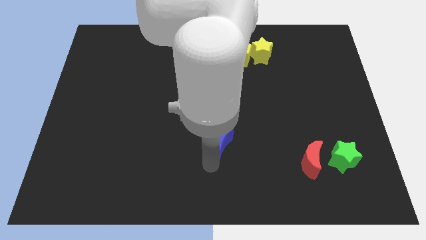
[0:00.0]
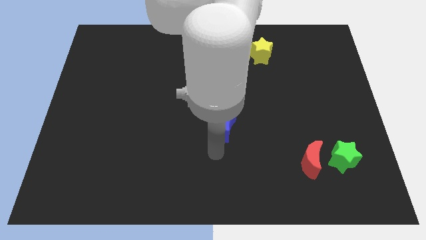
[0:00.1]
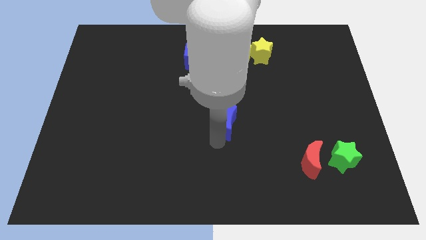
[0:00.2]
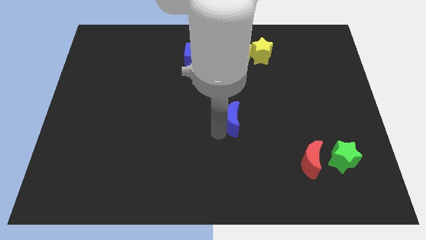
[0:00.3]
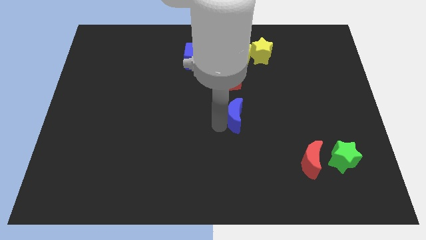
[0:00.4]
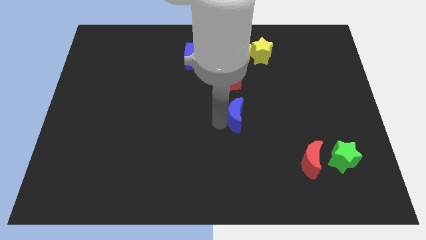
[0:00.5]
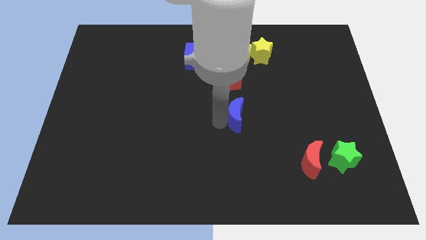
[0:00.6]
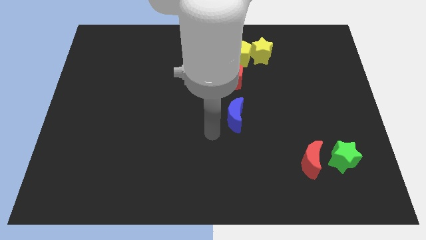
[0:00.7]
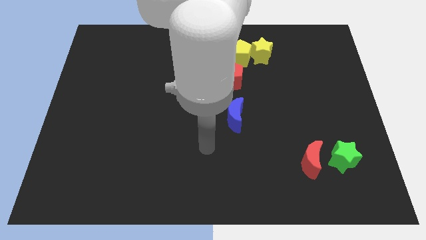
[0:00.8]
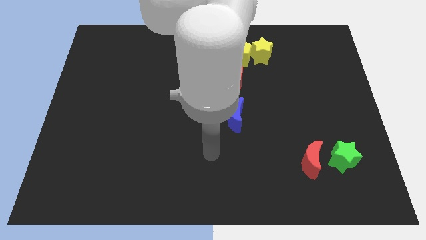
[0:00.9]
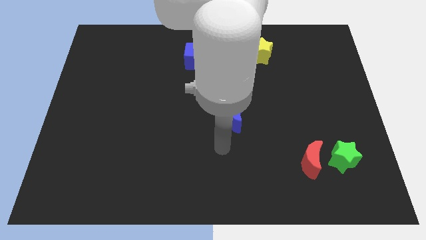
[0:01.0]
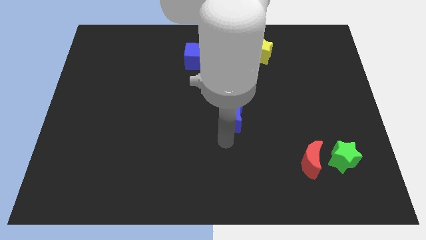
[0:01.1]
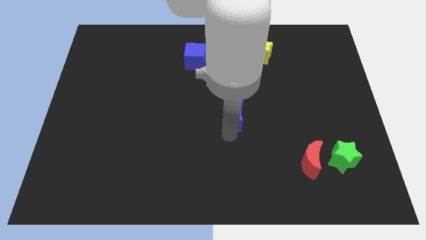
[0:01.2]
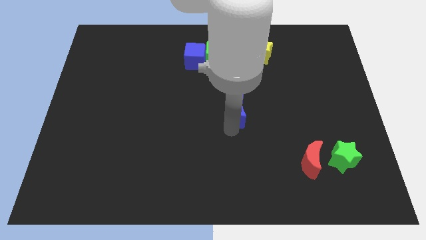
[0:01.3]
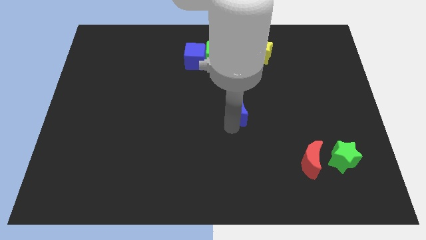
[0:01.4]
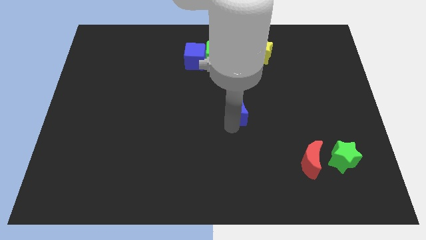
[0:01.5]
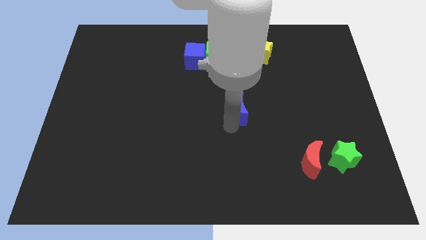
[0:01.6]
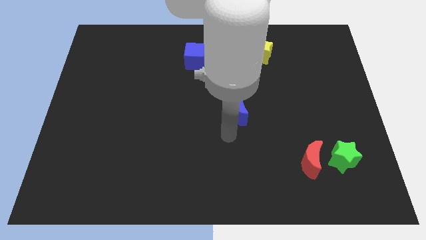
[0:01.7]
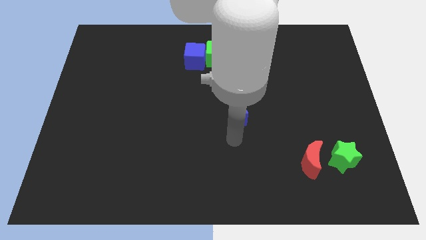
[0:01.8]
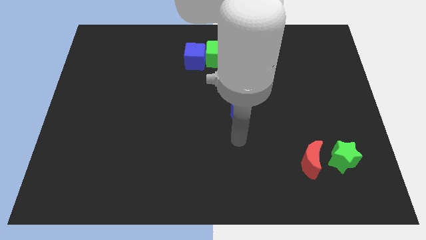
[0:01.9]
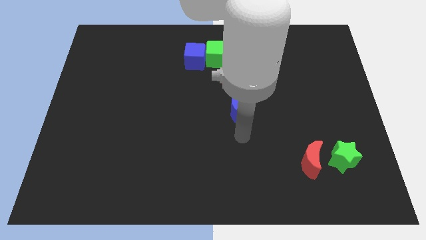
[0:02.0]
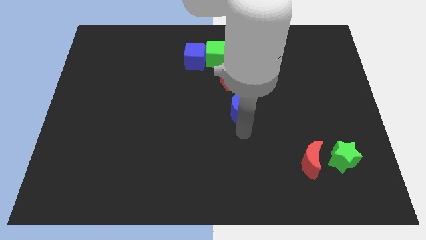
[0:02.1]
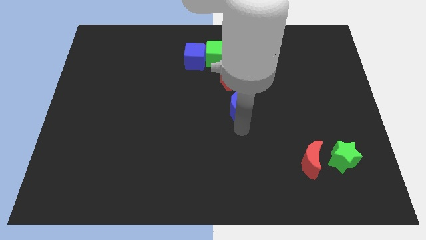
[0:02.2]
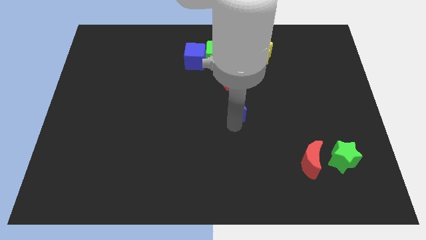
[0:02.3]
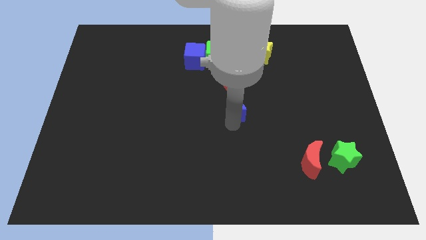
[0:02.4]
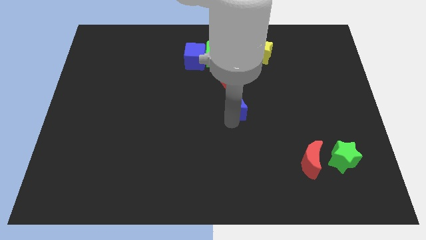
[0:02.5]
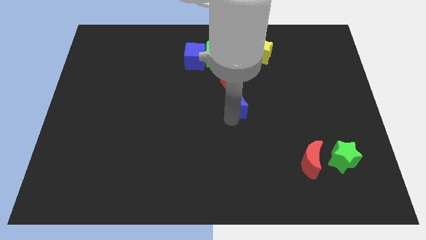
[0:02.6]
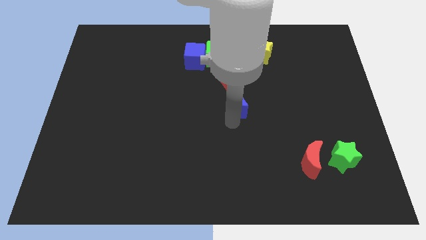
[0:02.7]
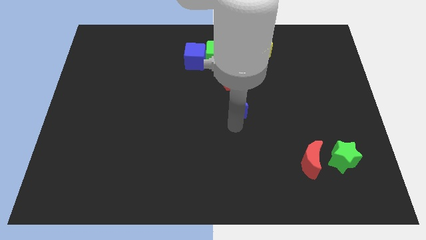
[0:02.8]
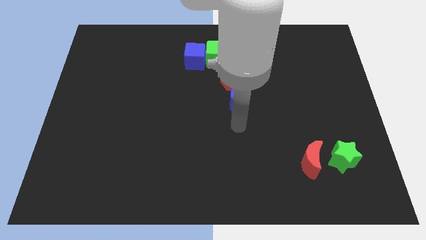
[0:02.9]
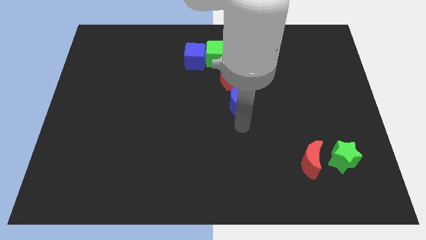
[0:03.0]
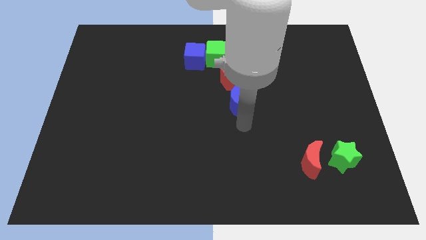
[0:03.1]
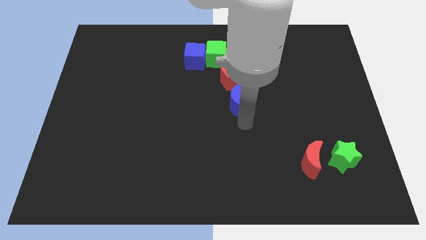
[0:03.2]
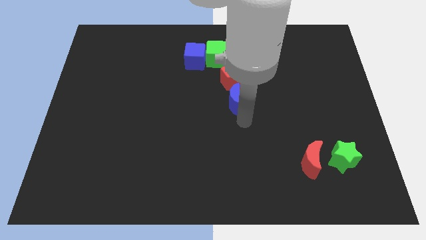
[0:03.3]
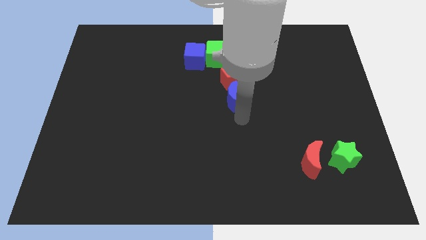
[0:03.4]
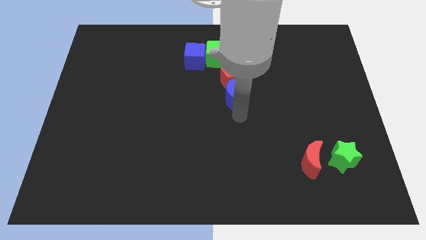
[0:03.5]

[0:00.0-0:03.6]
move the blue moon into the bottom of the red pentagon

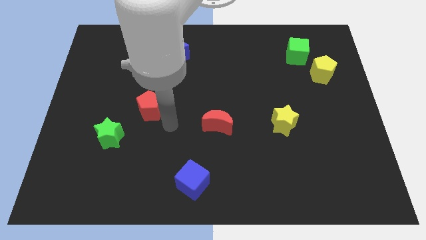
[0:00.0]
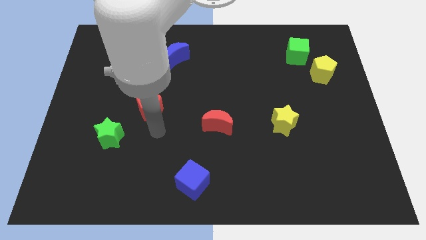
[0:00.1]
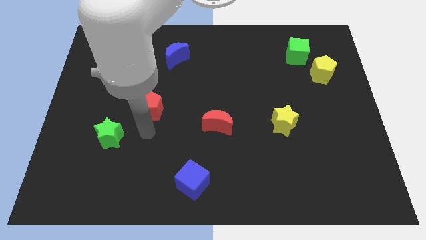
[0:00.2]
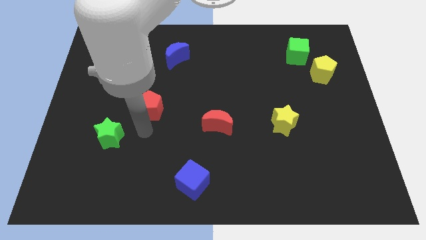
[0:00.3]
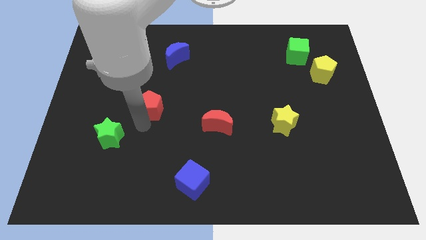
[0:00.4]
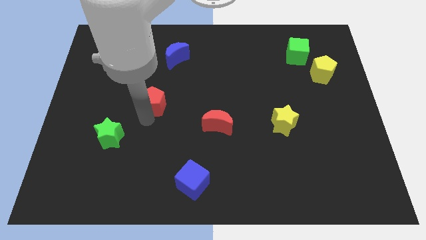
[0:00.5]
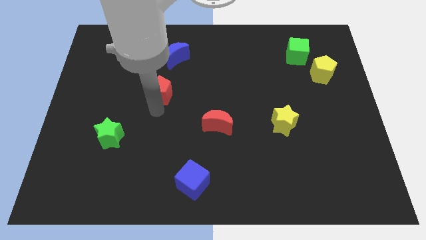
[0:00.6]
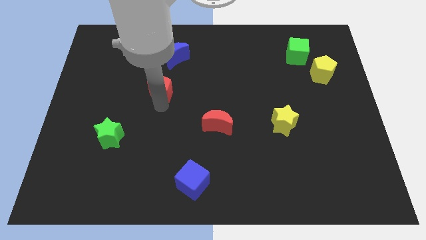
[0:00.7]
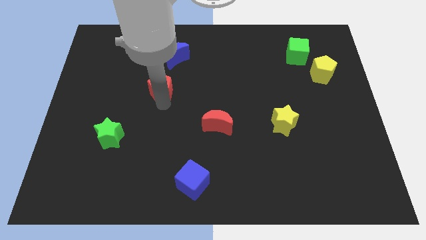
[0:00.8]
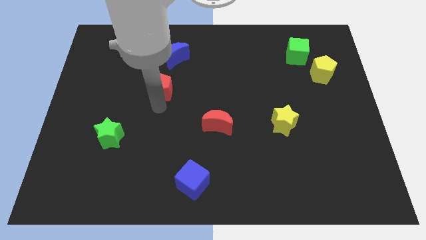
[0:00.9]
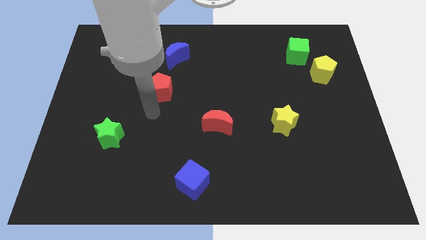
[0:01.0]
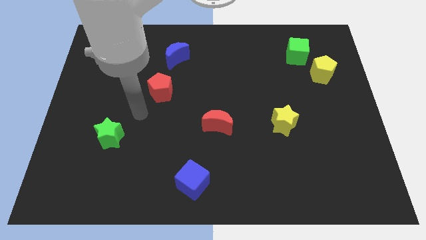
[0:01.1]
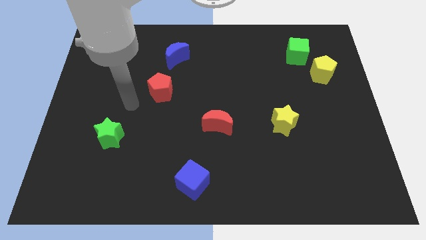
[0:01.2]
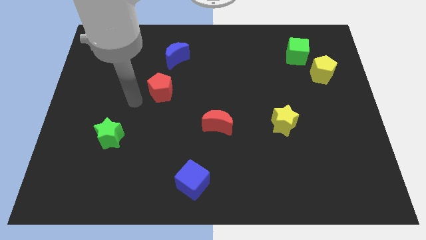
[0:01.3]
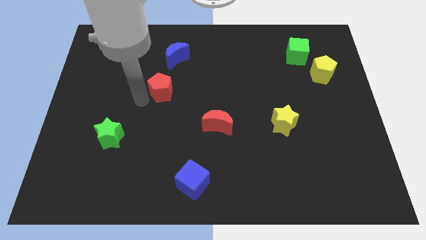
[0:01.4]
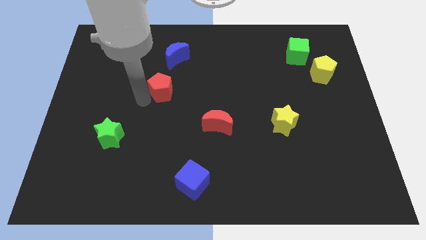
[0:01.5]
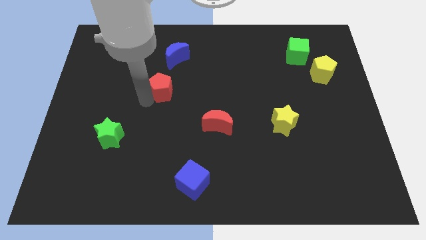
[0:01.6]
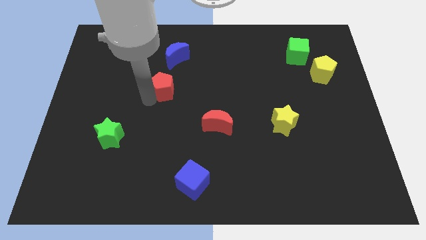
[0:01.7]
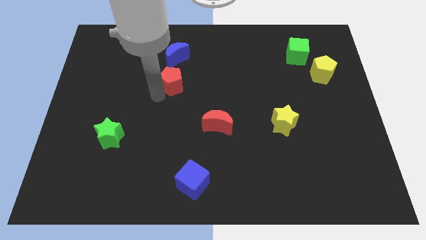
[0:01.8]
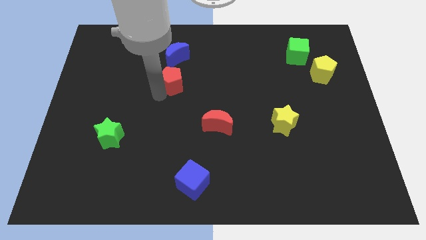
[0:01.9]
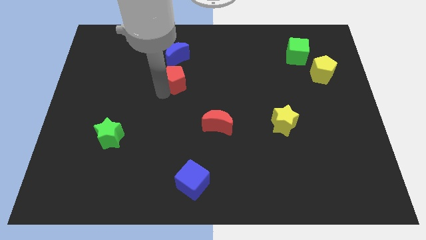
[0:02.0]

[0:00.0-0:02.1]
move red pentagon towards the blue moon

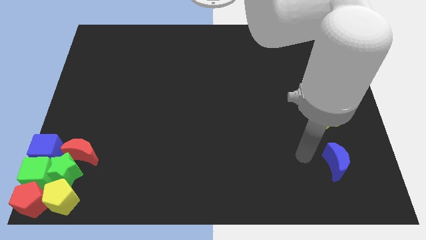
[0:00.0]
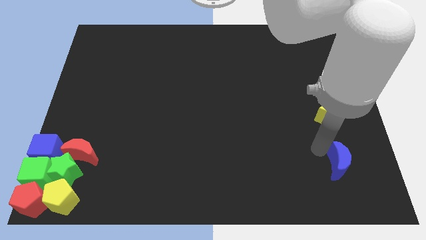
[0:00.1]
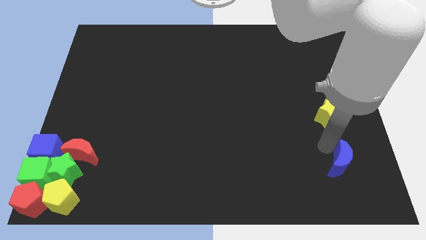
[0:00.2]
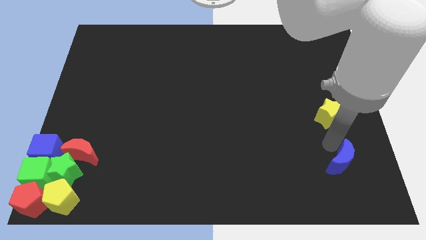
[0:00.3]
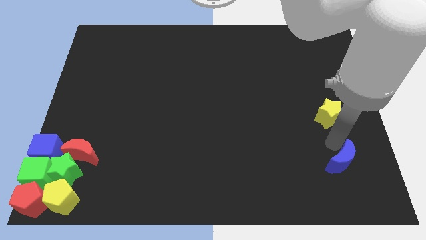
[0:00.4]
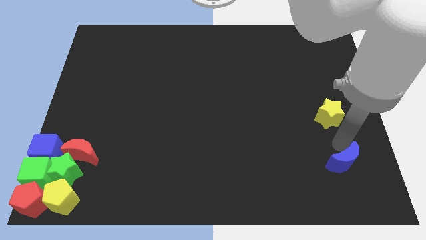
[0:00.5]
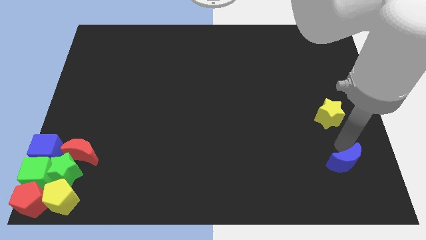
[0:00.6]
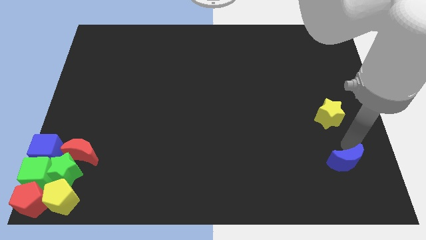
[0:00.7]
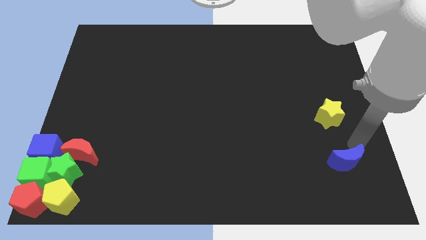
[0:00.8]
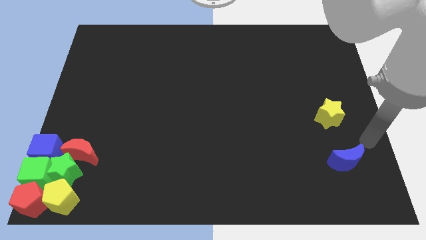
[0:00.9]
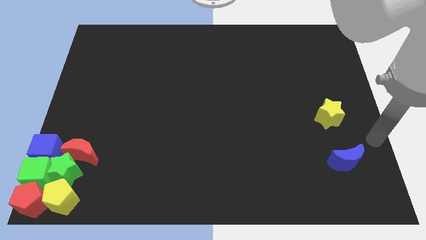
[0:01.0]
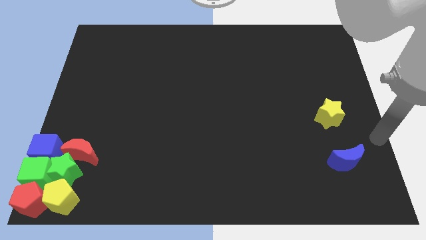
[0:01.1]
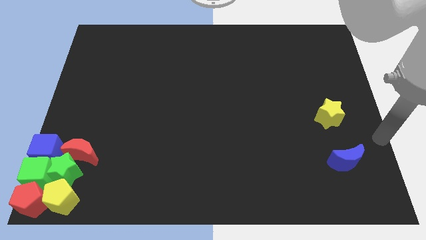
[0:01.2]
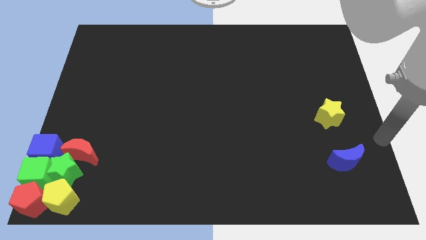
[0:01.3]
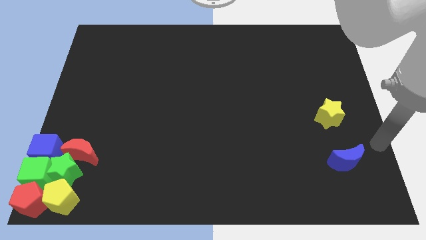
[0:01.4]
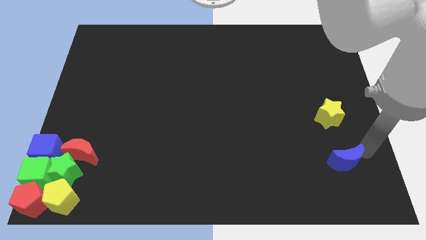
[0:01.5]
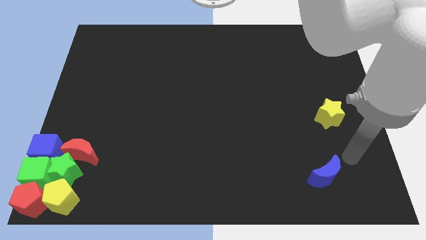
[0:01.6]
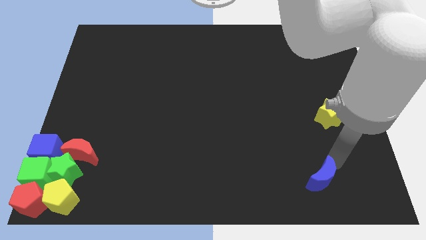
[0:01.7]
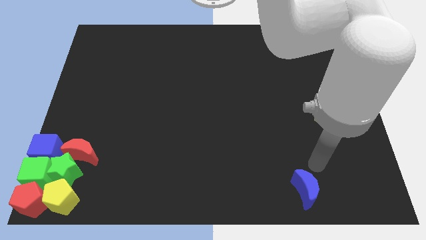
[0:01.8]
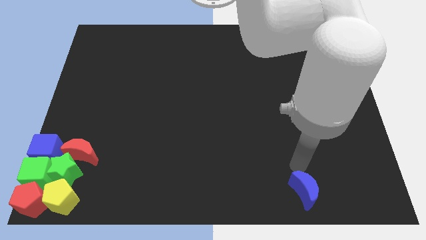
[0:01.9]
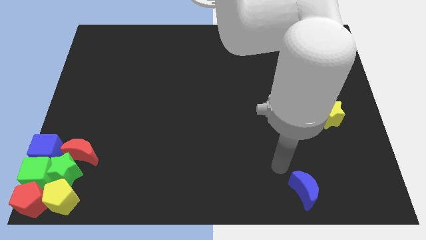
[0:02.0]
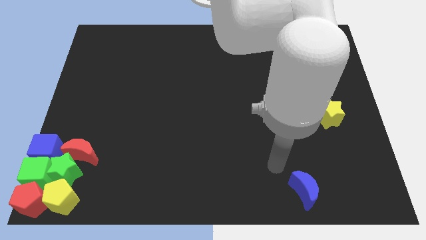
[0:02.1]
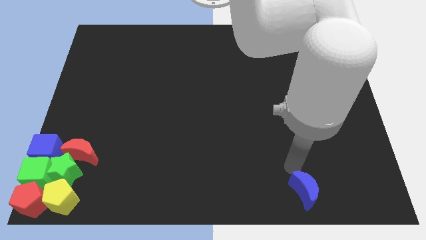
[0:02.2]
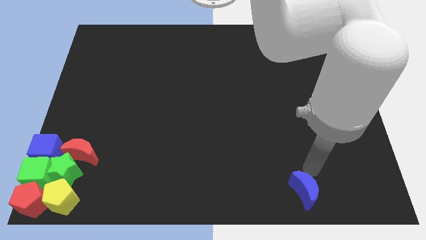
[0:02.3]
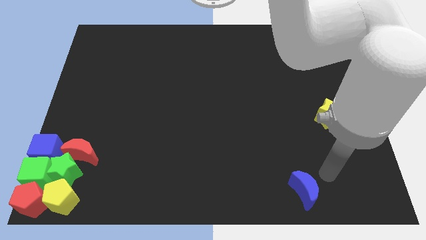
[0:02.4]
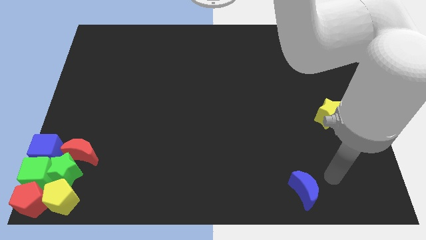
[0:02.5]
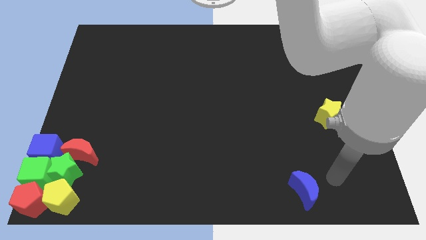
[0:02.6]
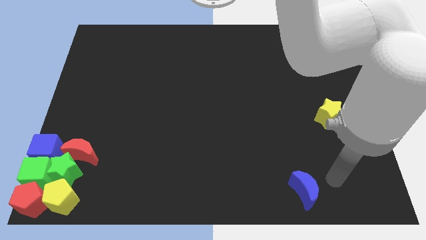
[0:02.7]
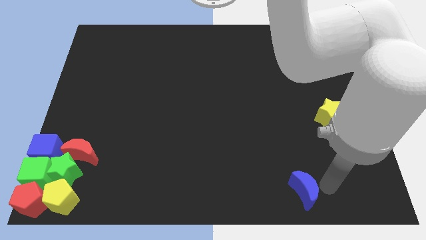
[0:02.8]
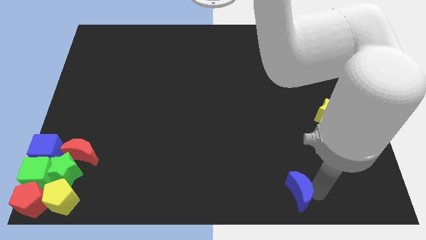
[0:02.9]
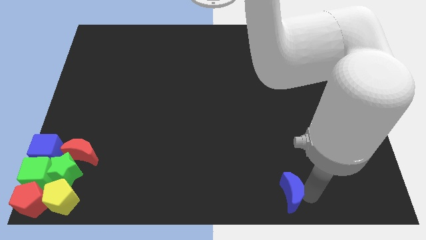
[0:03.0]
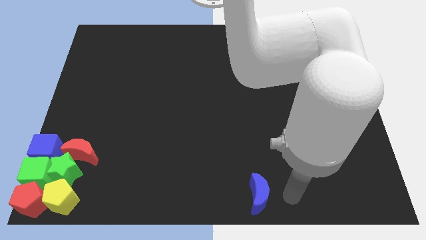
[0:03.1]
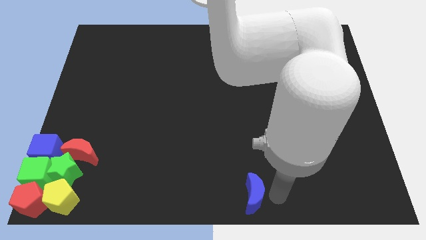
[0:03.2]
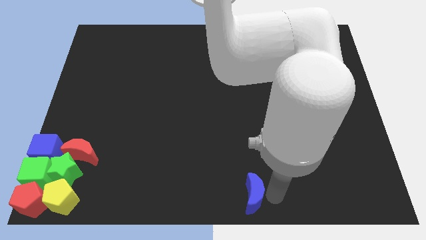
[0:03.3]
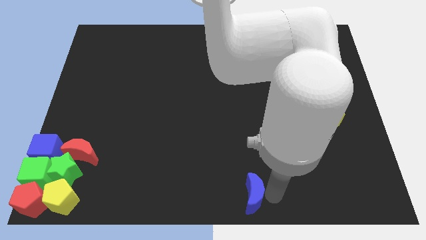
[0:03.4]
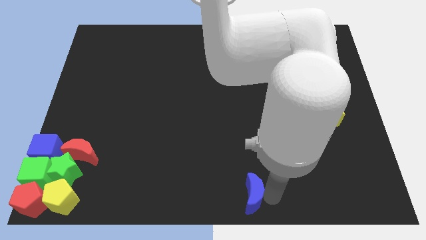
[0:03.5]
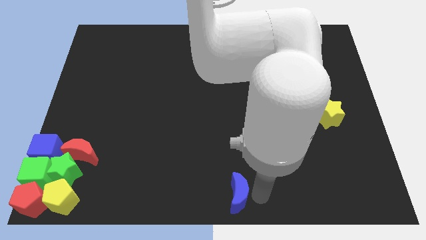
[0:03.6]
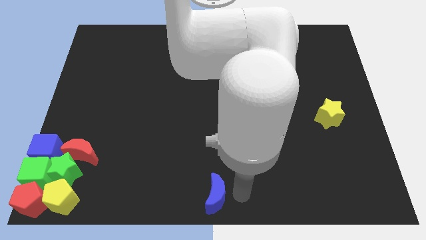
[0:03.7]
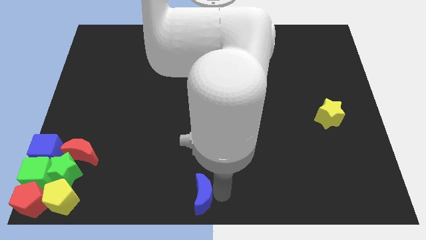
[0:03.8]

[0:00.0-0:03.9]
move the blue moon to the bottom center
